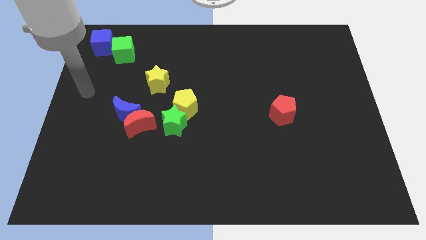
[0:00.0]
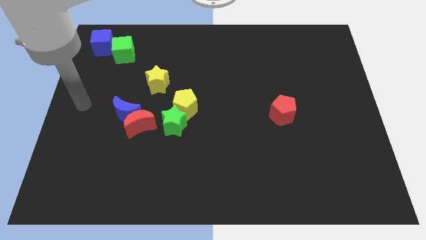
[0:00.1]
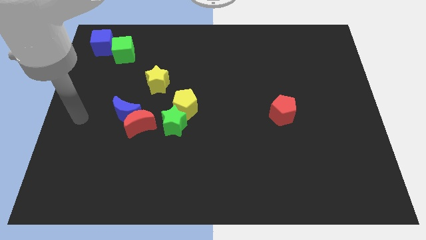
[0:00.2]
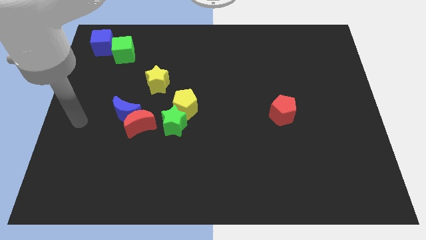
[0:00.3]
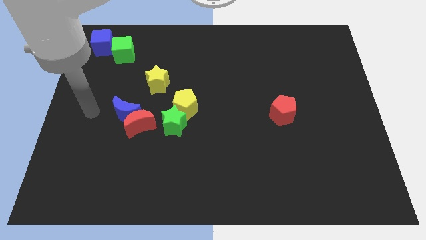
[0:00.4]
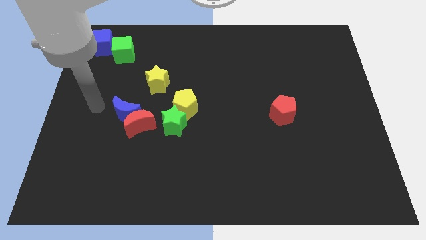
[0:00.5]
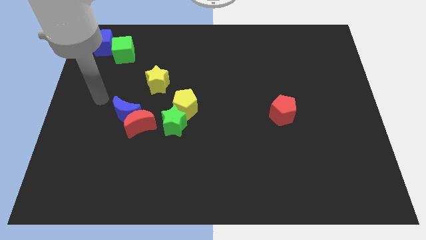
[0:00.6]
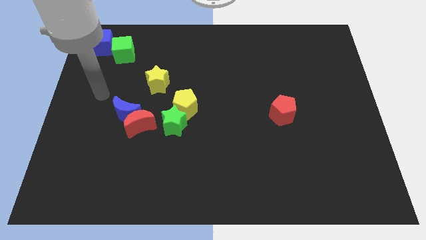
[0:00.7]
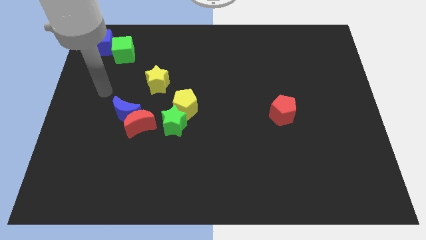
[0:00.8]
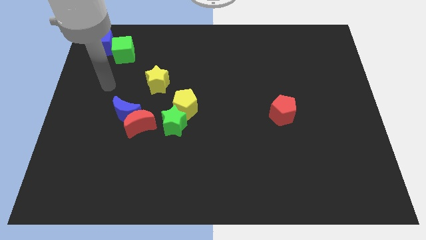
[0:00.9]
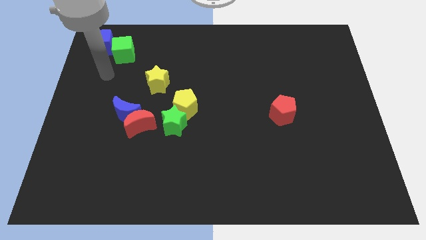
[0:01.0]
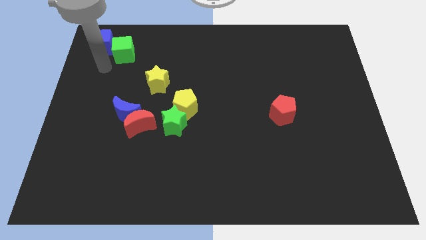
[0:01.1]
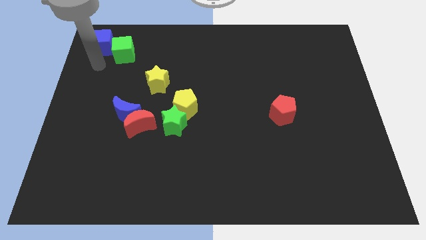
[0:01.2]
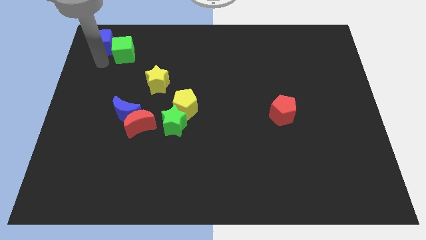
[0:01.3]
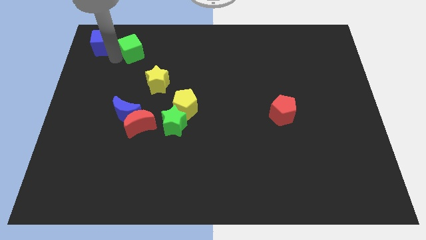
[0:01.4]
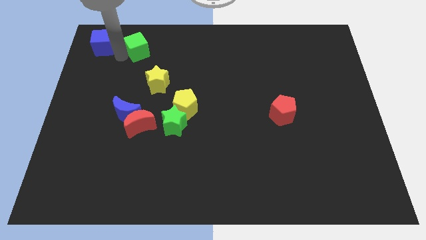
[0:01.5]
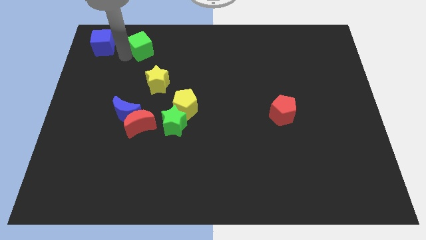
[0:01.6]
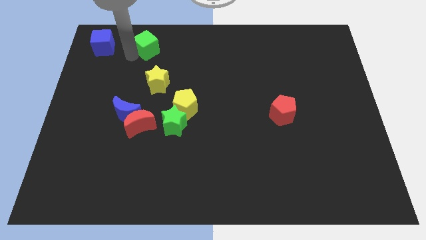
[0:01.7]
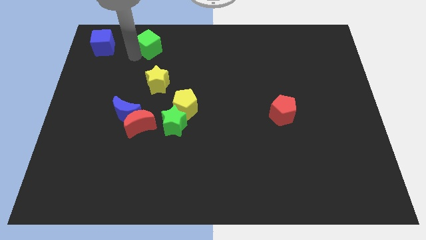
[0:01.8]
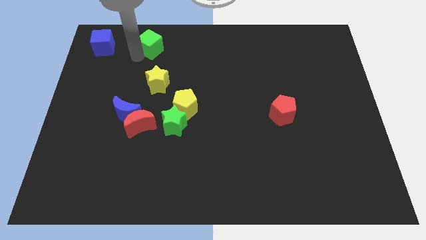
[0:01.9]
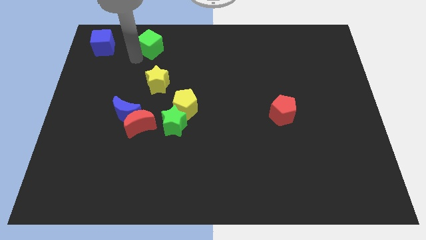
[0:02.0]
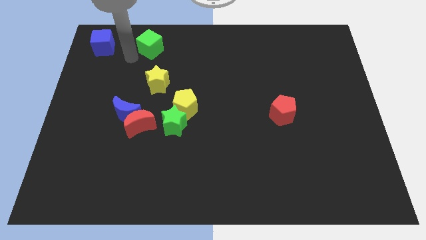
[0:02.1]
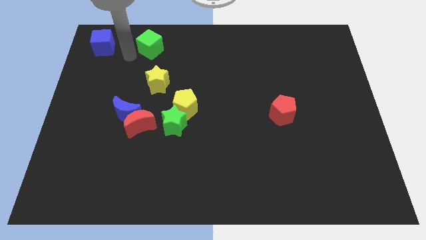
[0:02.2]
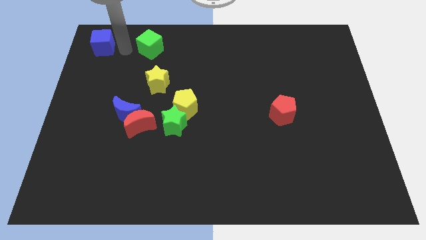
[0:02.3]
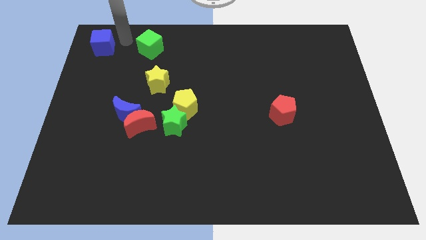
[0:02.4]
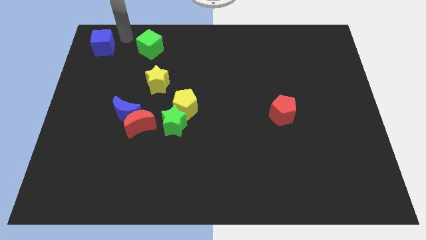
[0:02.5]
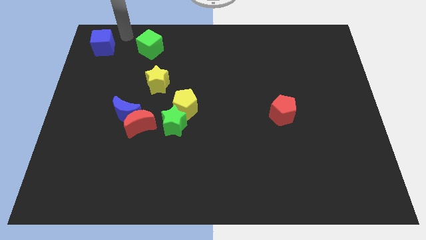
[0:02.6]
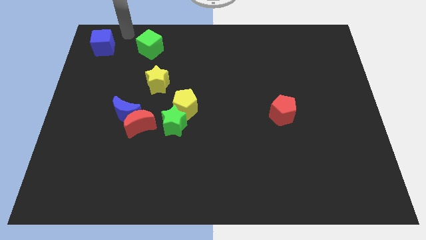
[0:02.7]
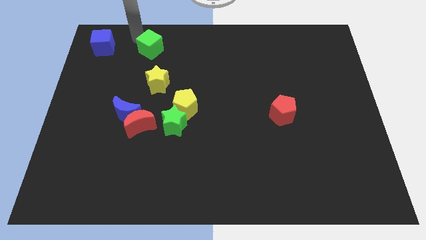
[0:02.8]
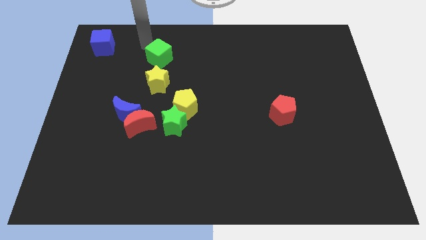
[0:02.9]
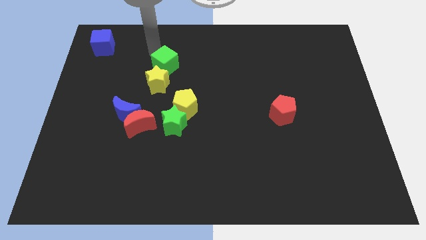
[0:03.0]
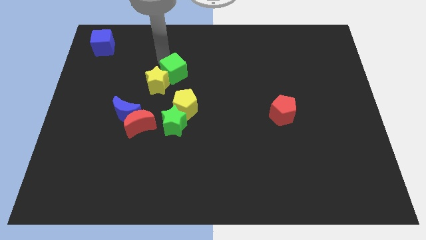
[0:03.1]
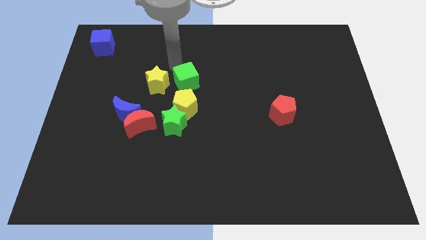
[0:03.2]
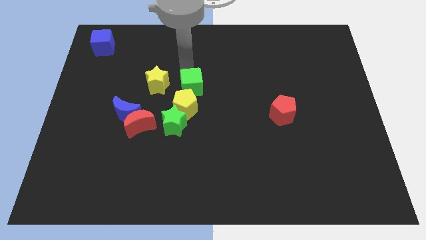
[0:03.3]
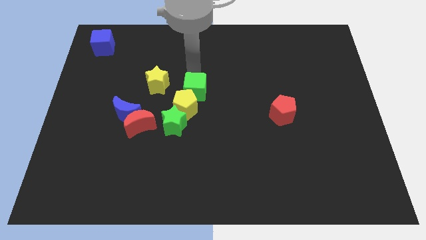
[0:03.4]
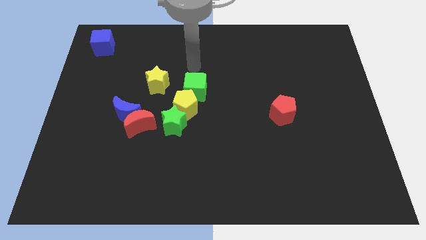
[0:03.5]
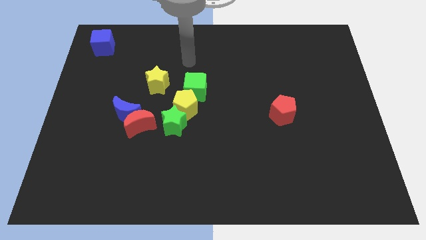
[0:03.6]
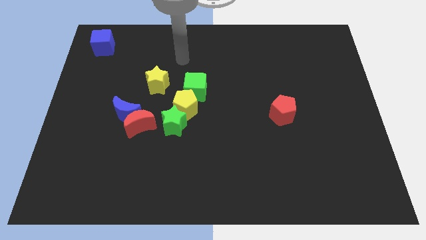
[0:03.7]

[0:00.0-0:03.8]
place the green cube on top touching the yellow pentagon

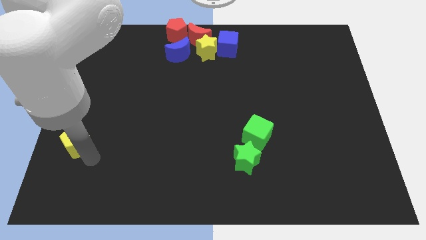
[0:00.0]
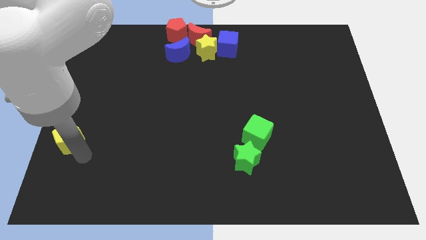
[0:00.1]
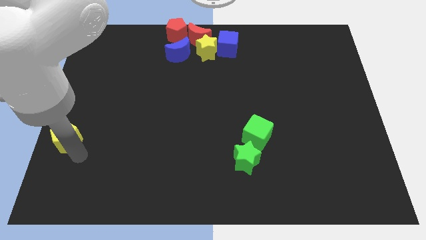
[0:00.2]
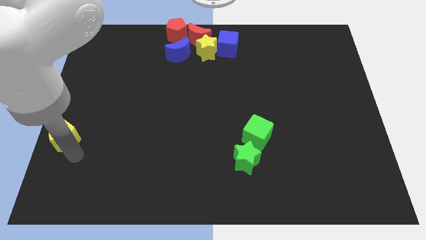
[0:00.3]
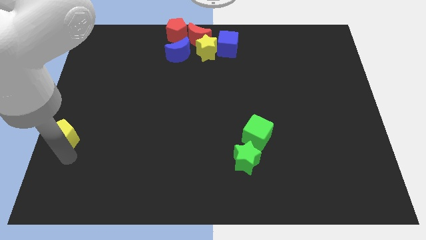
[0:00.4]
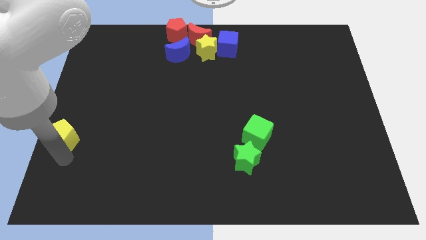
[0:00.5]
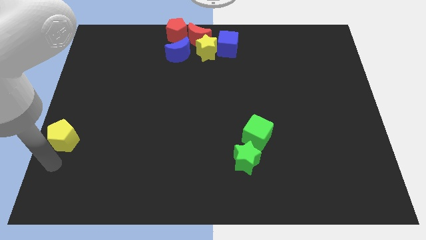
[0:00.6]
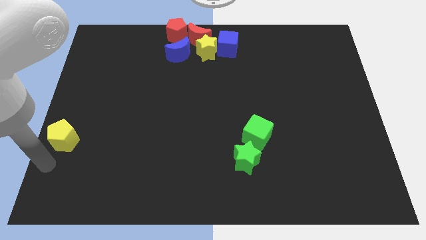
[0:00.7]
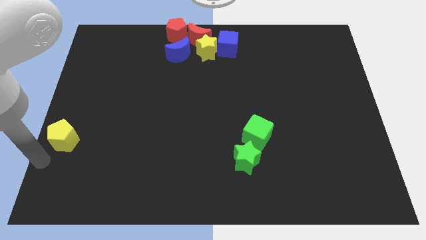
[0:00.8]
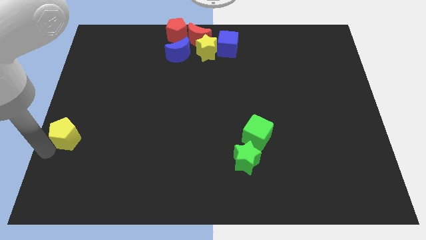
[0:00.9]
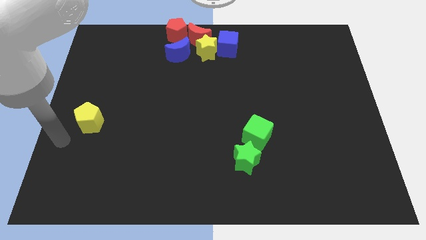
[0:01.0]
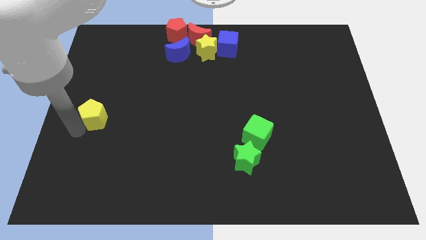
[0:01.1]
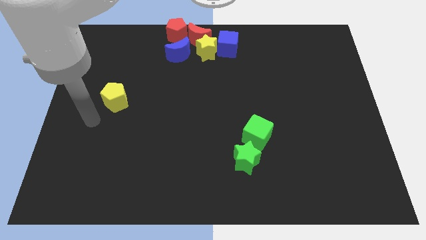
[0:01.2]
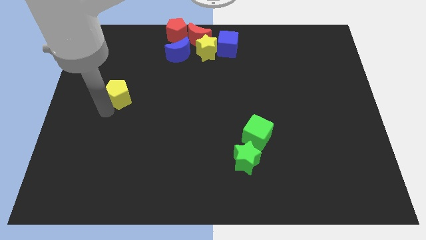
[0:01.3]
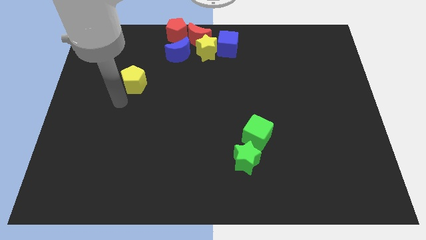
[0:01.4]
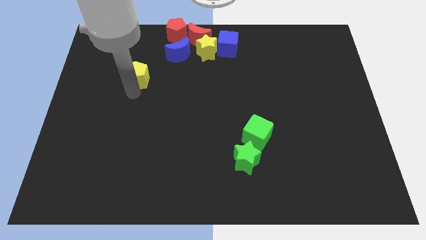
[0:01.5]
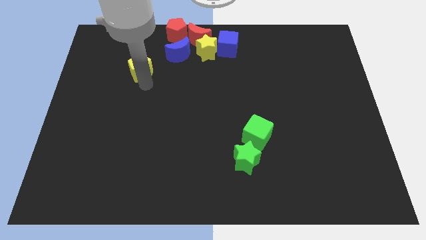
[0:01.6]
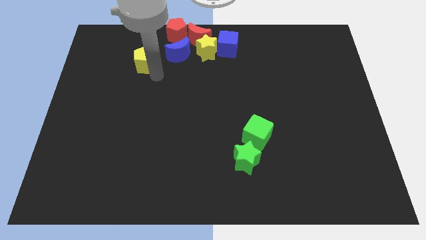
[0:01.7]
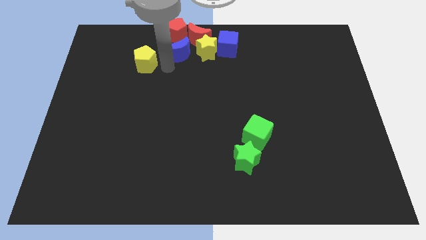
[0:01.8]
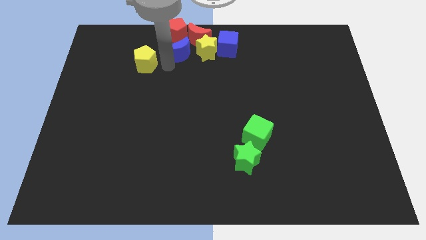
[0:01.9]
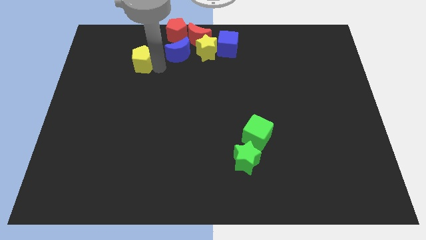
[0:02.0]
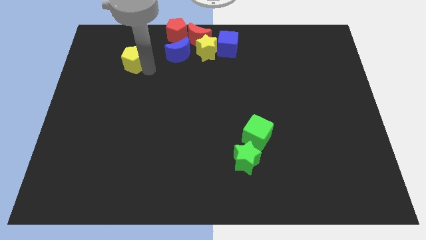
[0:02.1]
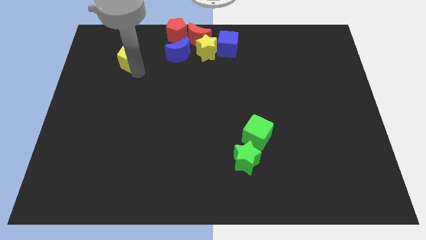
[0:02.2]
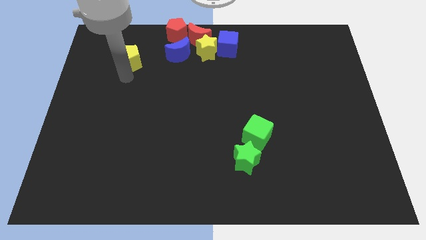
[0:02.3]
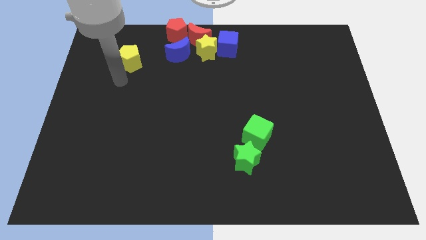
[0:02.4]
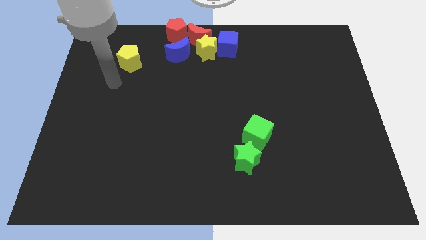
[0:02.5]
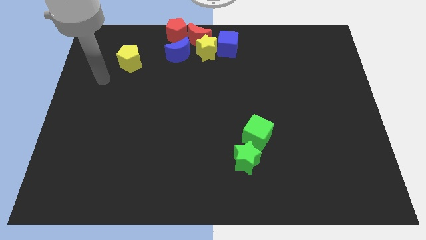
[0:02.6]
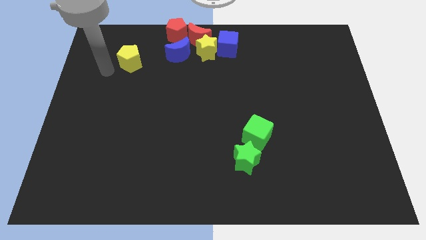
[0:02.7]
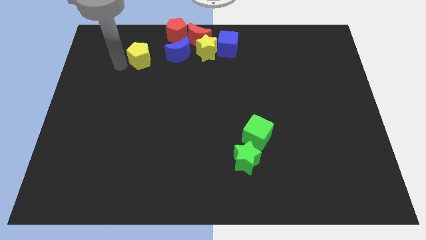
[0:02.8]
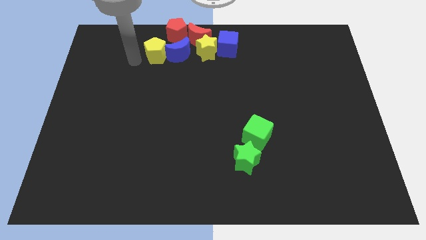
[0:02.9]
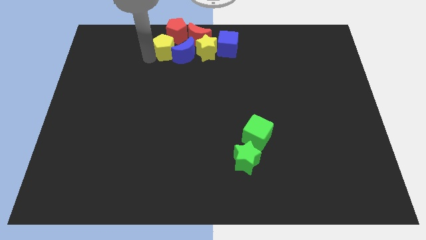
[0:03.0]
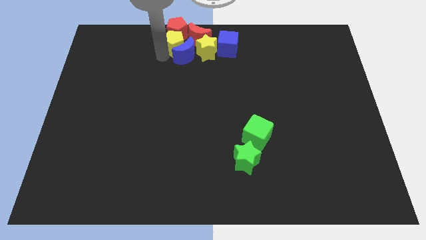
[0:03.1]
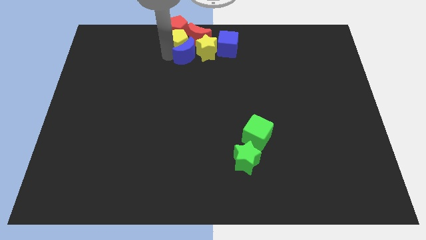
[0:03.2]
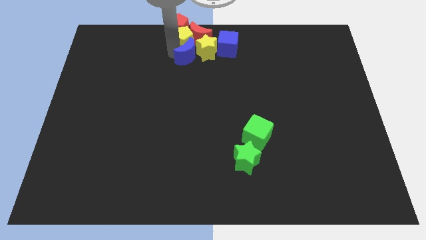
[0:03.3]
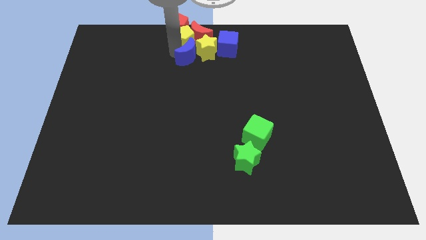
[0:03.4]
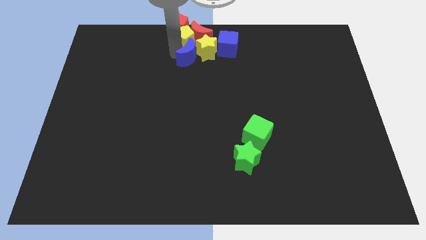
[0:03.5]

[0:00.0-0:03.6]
push the yellow pentagon into the red crescent

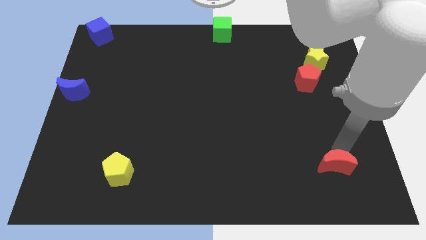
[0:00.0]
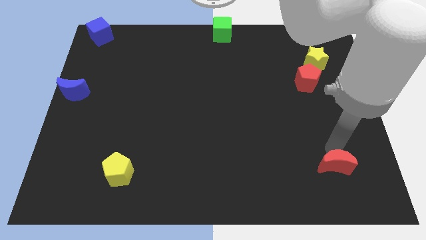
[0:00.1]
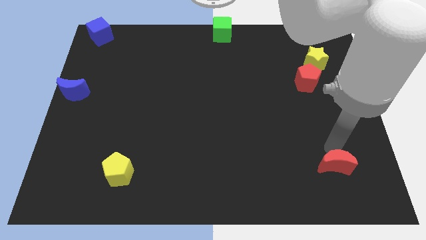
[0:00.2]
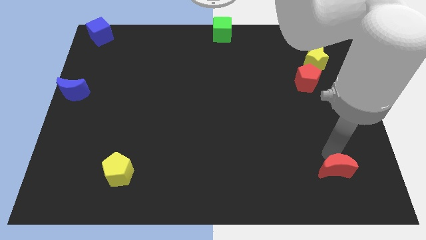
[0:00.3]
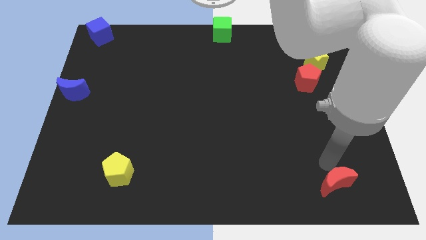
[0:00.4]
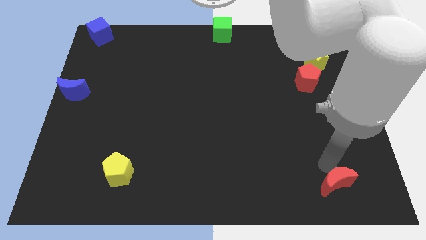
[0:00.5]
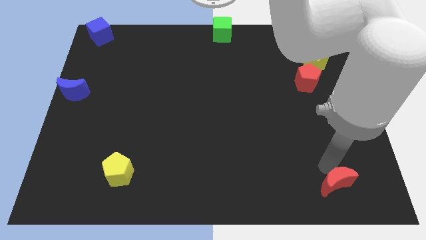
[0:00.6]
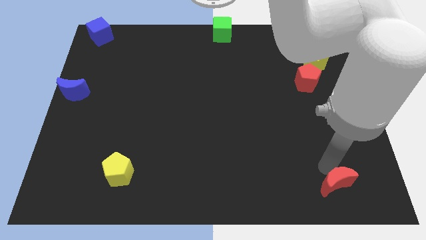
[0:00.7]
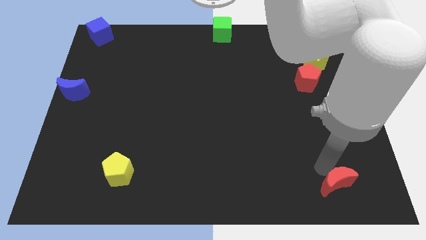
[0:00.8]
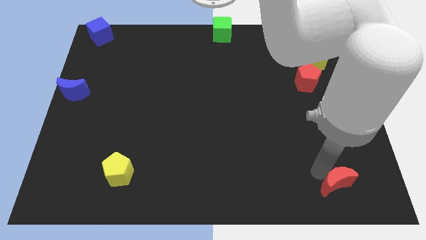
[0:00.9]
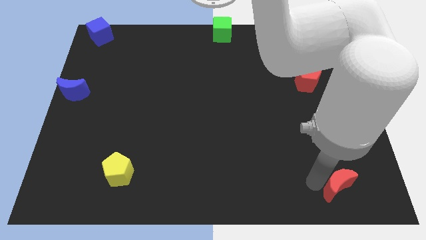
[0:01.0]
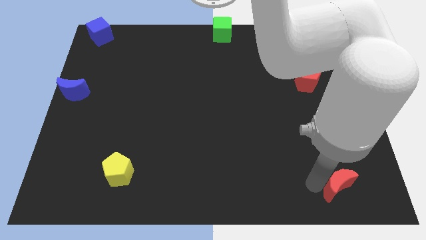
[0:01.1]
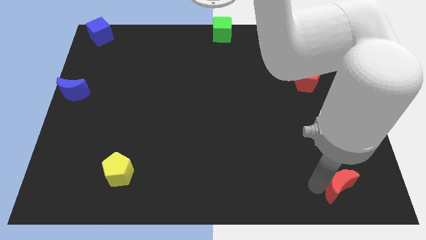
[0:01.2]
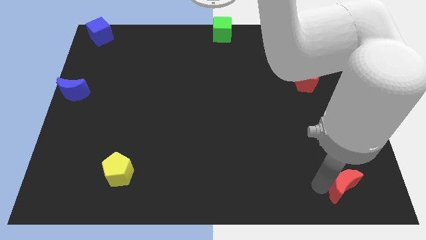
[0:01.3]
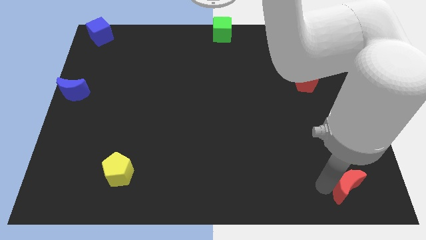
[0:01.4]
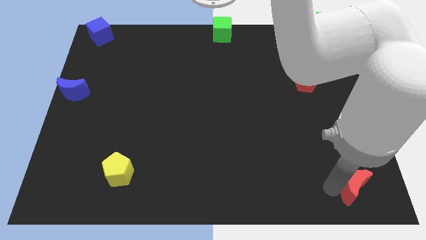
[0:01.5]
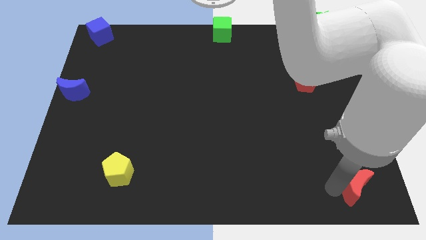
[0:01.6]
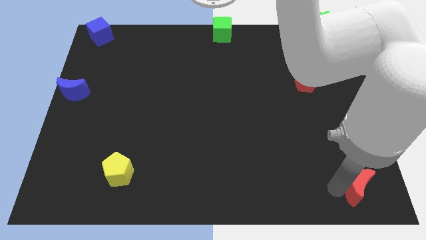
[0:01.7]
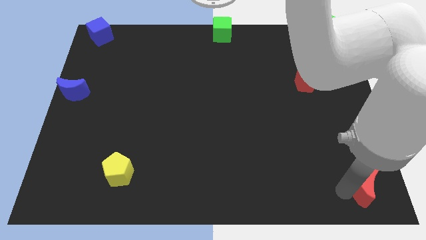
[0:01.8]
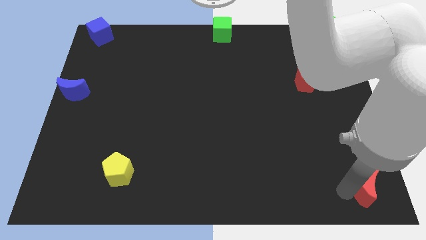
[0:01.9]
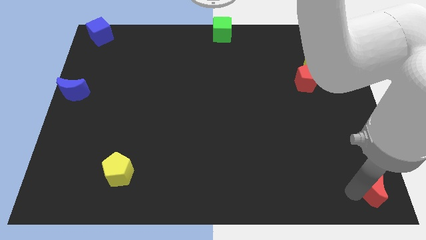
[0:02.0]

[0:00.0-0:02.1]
move red moon to the bottom right
